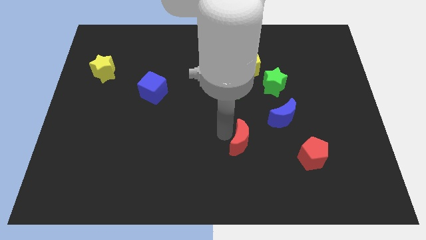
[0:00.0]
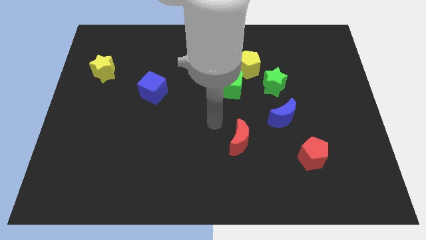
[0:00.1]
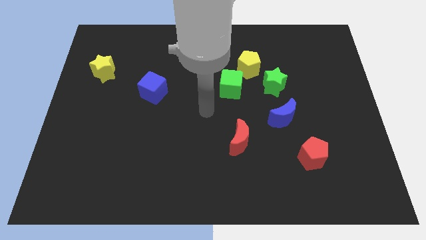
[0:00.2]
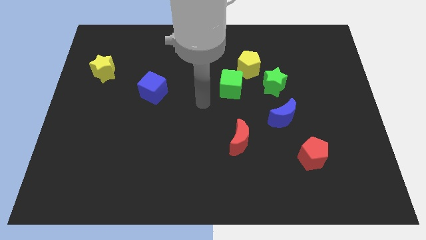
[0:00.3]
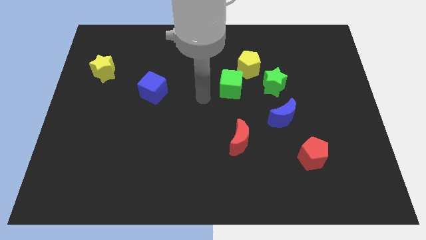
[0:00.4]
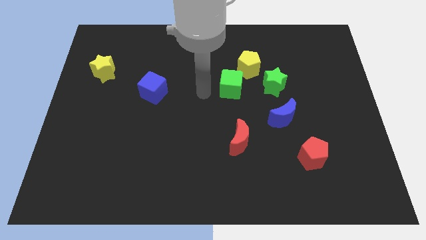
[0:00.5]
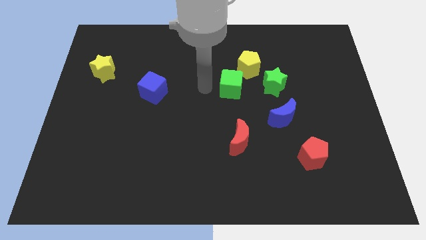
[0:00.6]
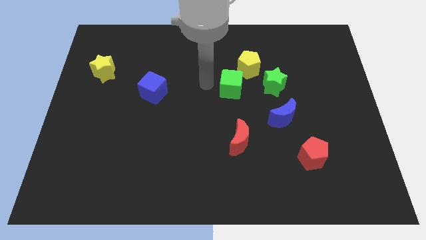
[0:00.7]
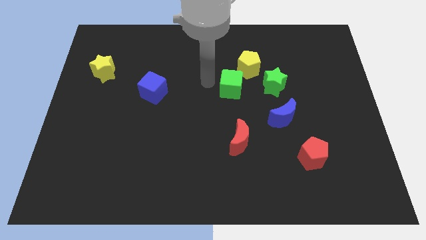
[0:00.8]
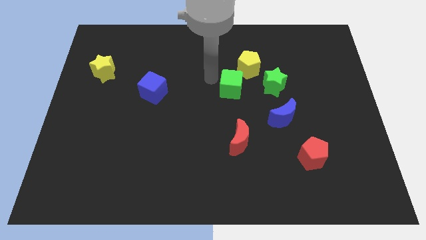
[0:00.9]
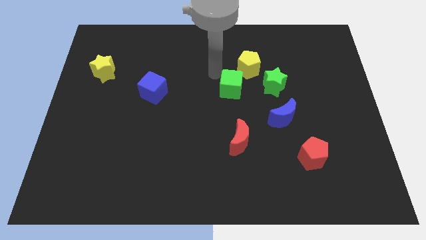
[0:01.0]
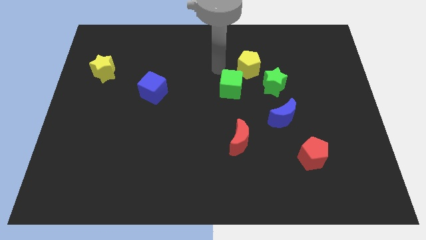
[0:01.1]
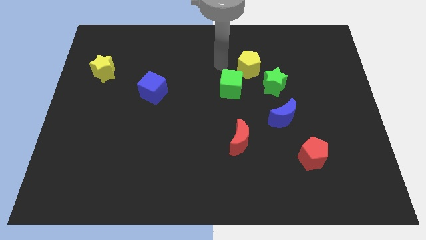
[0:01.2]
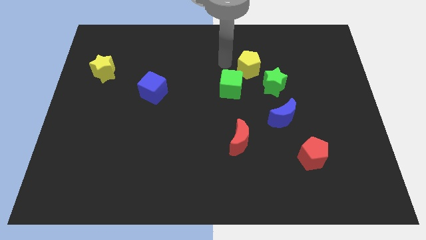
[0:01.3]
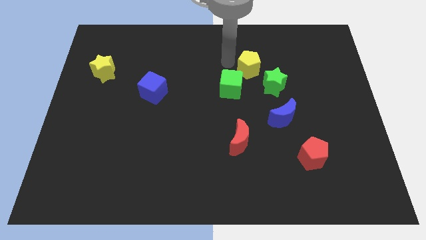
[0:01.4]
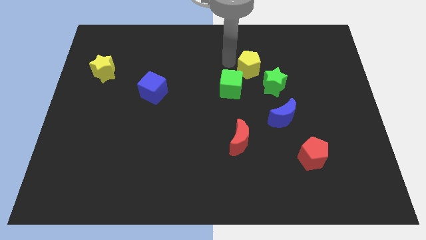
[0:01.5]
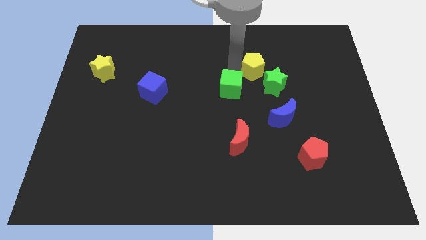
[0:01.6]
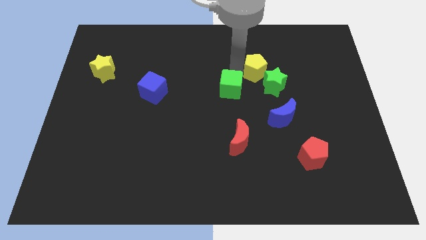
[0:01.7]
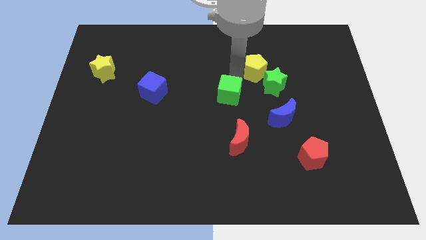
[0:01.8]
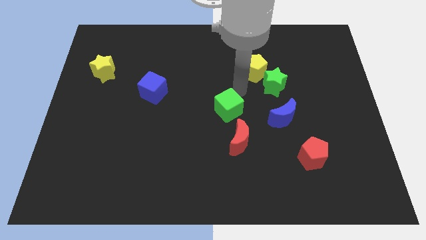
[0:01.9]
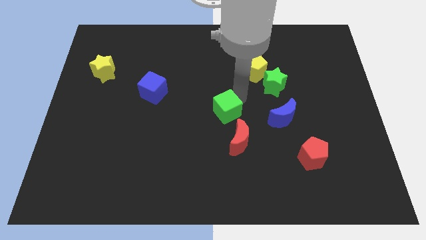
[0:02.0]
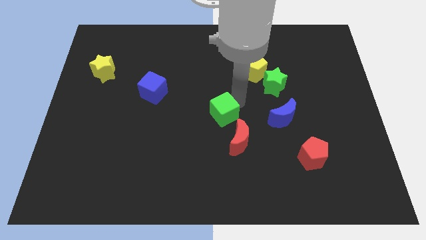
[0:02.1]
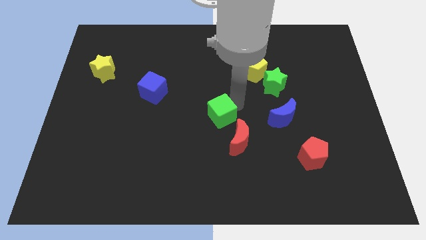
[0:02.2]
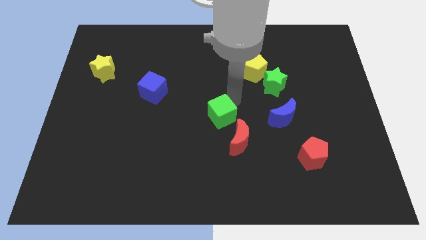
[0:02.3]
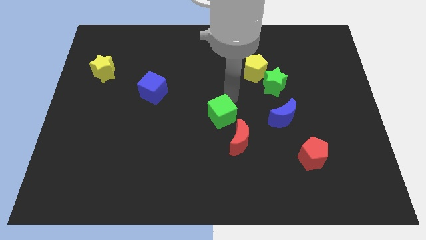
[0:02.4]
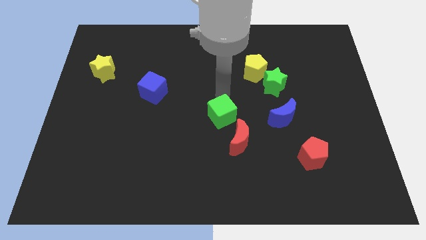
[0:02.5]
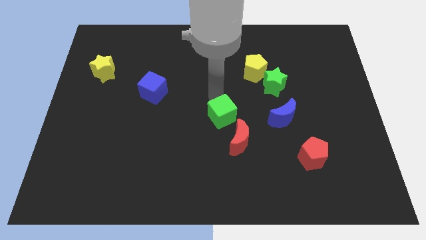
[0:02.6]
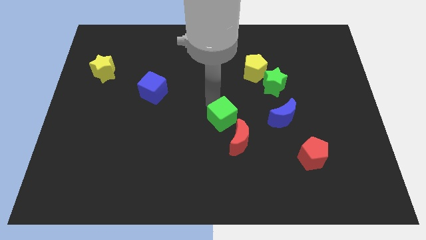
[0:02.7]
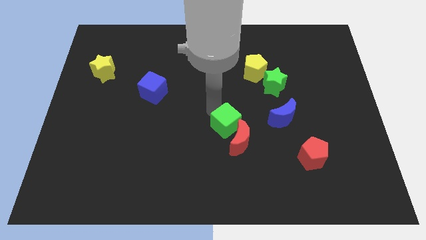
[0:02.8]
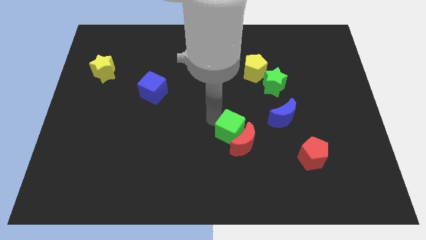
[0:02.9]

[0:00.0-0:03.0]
make the green cube touch the red crescent

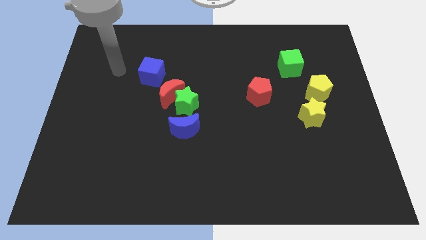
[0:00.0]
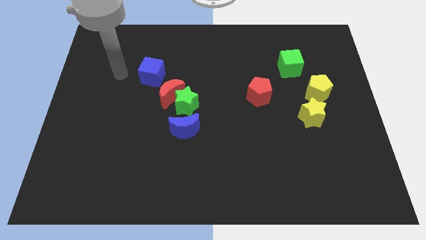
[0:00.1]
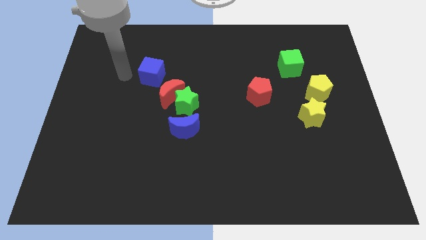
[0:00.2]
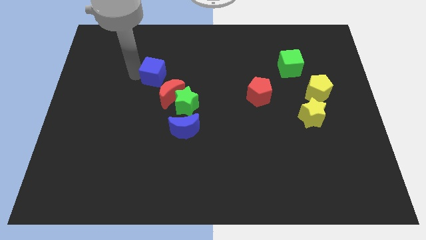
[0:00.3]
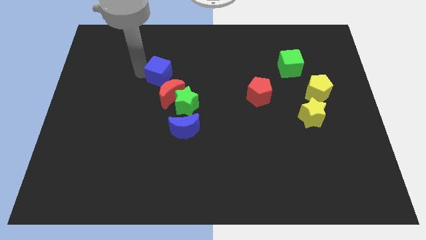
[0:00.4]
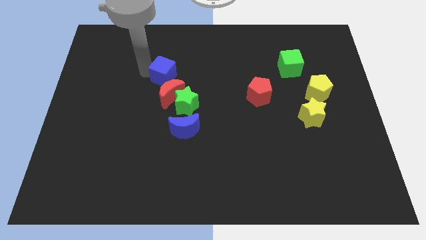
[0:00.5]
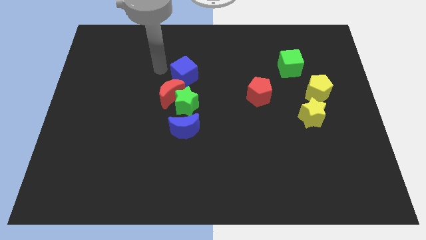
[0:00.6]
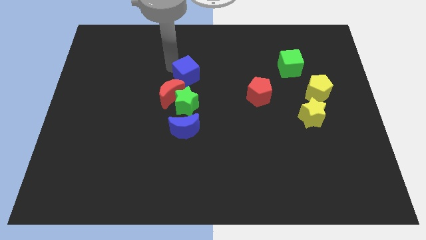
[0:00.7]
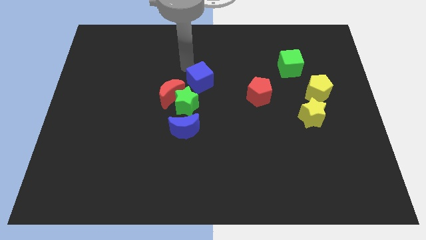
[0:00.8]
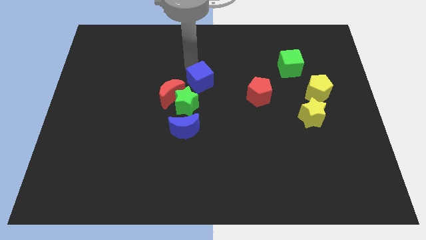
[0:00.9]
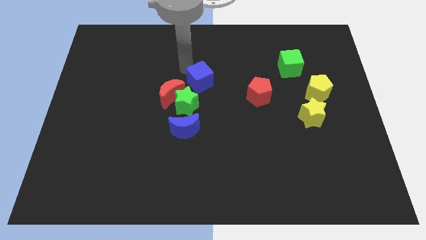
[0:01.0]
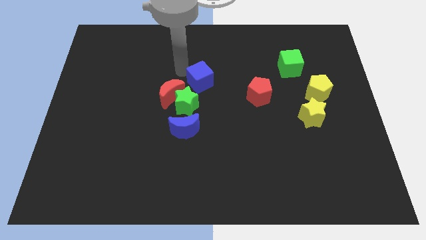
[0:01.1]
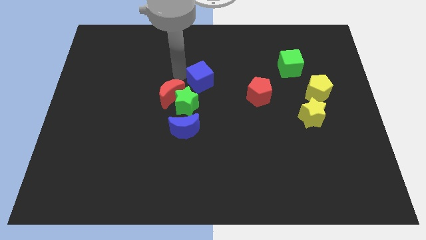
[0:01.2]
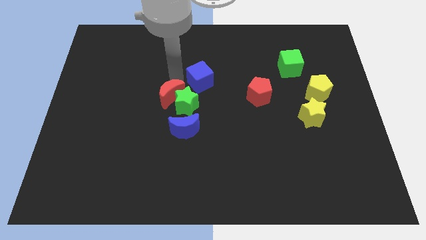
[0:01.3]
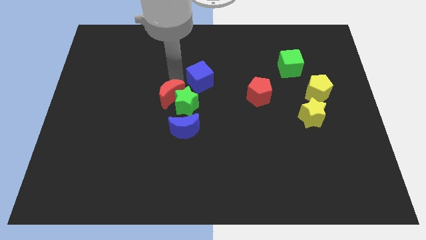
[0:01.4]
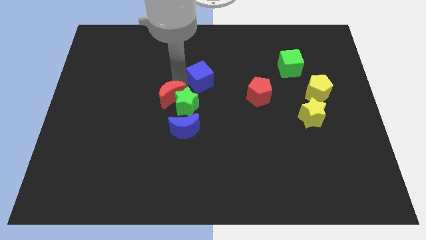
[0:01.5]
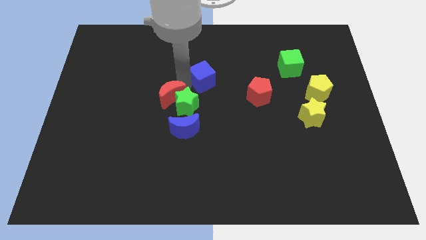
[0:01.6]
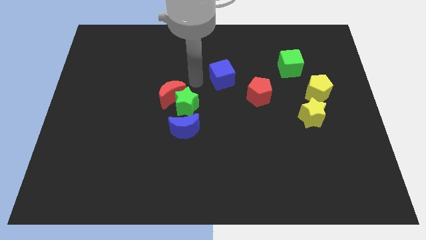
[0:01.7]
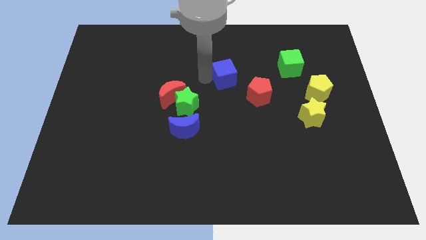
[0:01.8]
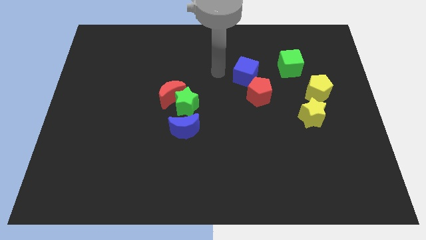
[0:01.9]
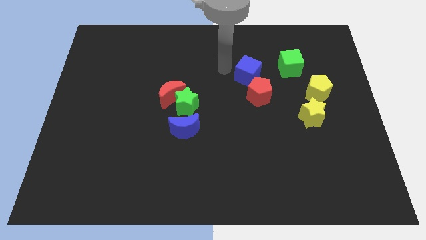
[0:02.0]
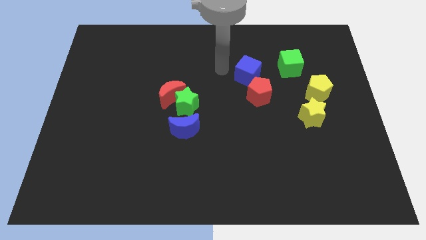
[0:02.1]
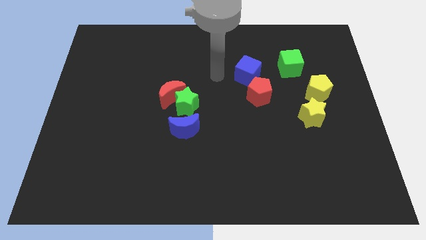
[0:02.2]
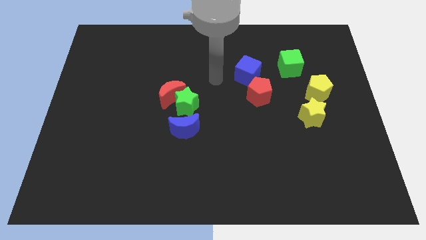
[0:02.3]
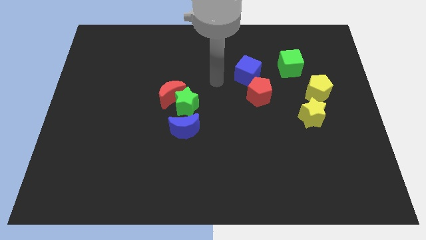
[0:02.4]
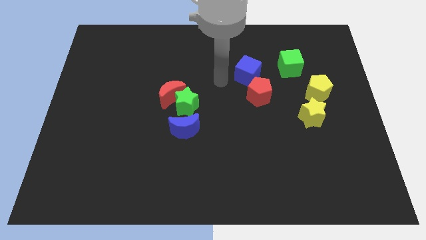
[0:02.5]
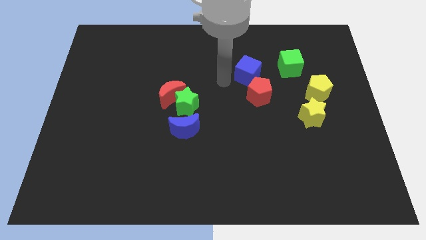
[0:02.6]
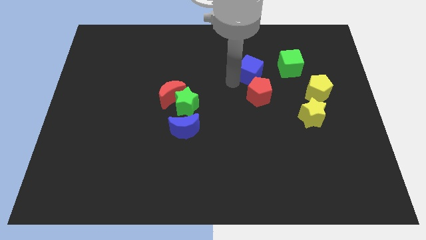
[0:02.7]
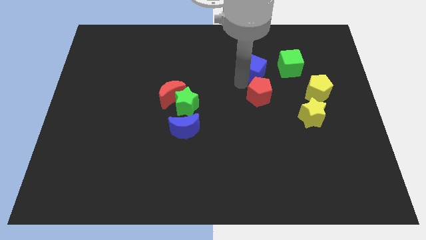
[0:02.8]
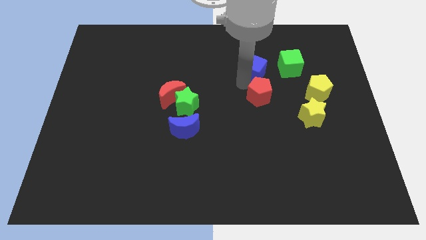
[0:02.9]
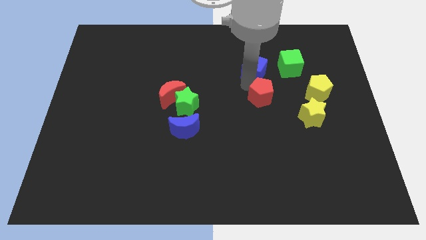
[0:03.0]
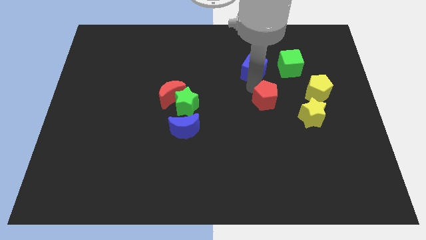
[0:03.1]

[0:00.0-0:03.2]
point your arm between blue cube and red pentagon

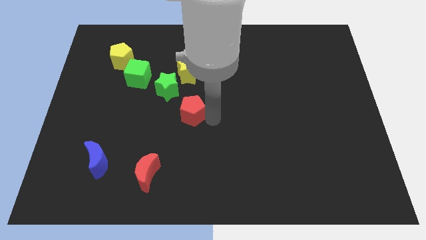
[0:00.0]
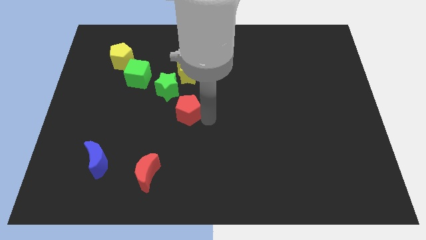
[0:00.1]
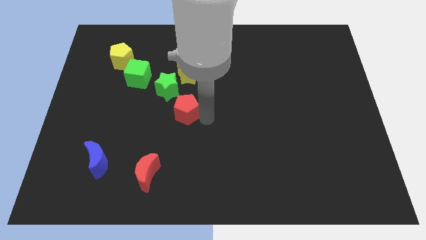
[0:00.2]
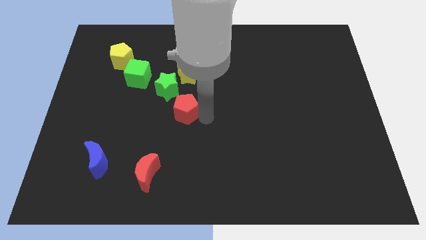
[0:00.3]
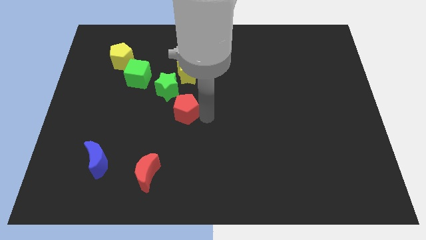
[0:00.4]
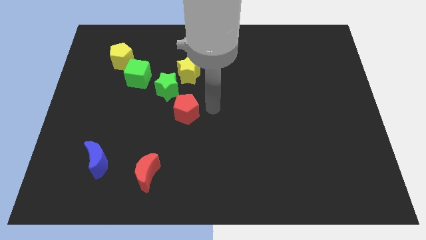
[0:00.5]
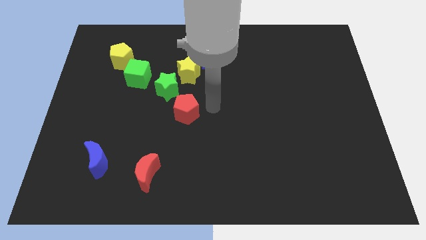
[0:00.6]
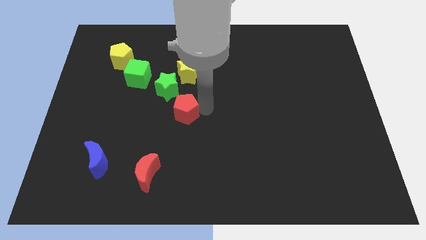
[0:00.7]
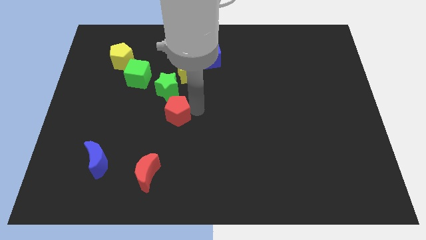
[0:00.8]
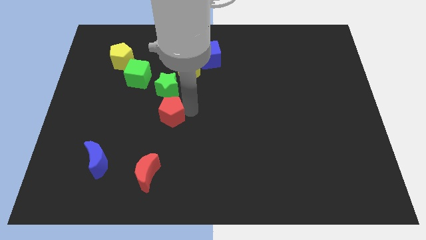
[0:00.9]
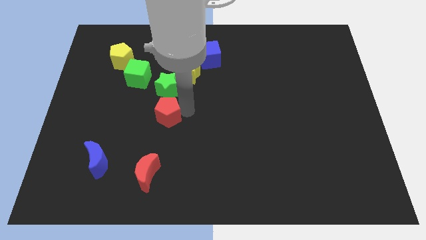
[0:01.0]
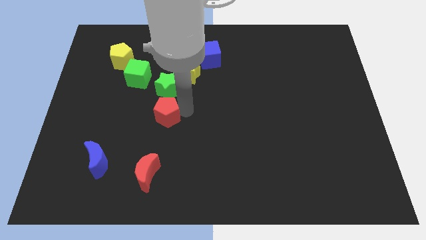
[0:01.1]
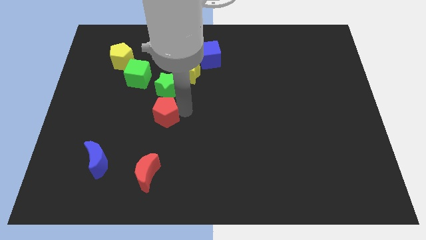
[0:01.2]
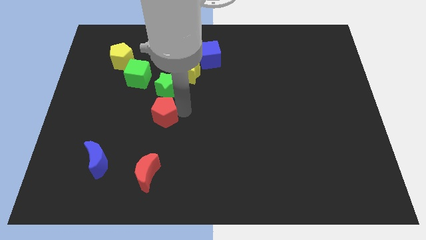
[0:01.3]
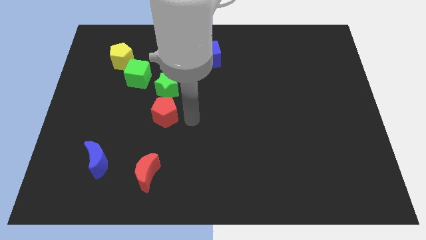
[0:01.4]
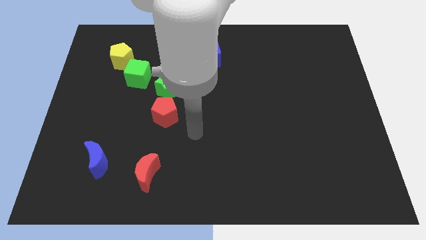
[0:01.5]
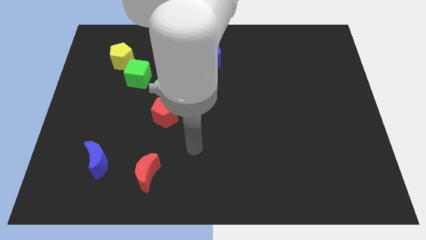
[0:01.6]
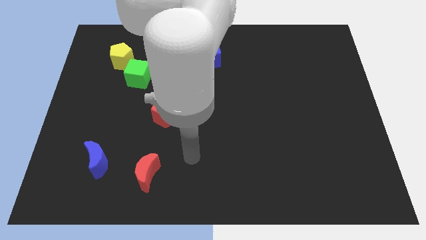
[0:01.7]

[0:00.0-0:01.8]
place the red pentagon below the green star

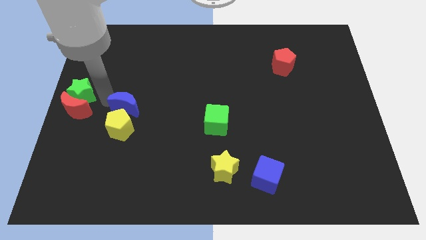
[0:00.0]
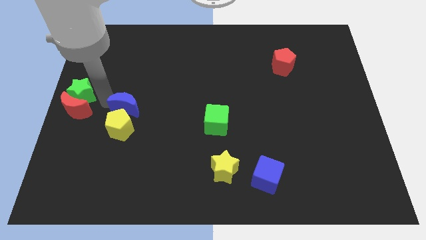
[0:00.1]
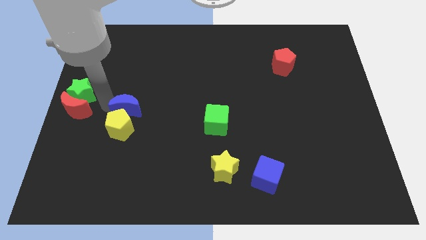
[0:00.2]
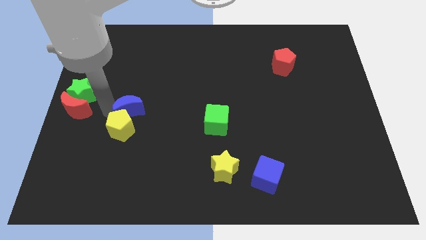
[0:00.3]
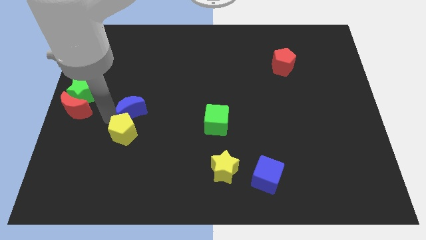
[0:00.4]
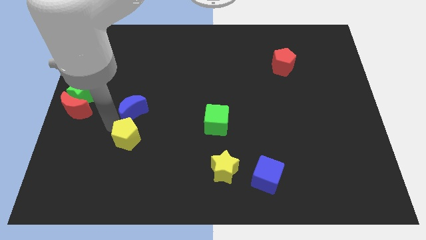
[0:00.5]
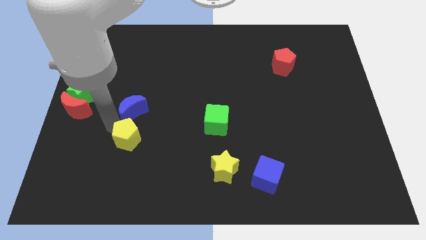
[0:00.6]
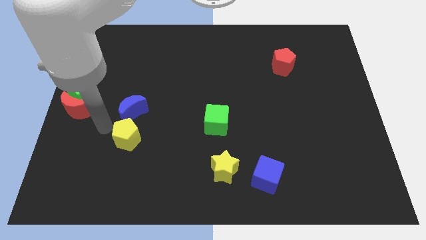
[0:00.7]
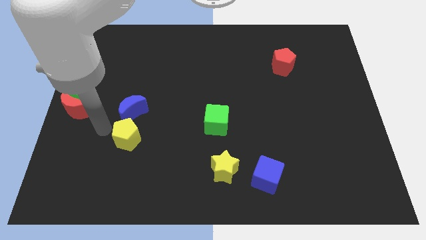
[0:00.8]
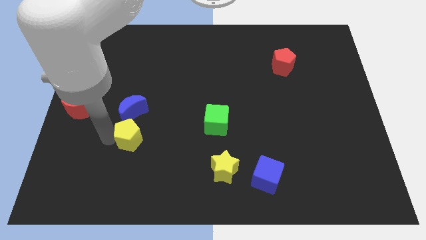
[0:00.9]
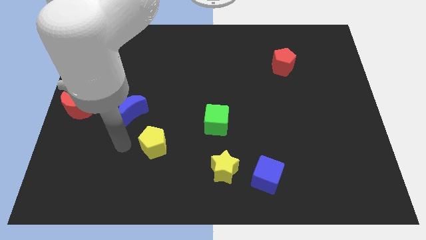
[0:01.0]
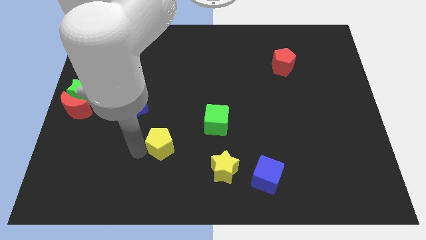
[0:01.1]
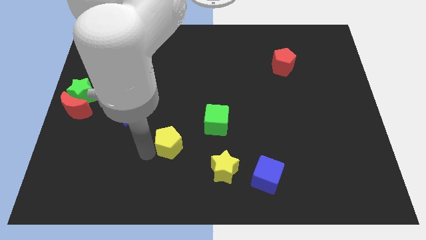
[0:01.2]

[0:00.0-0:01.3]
push the blue moon into the yellow pentagon

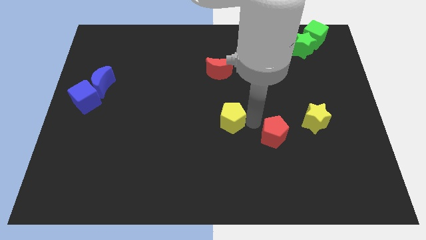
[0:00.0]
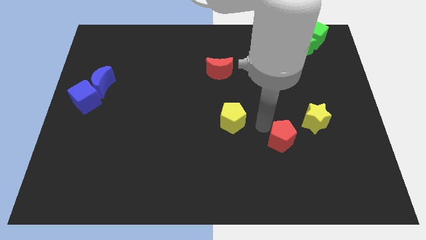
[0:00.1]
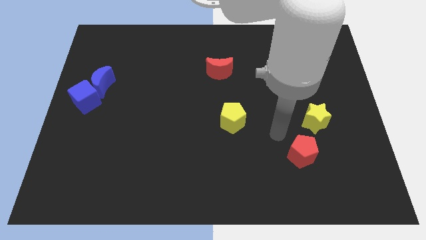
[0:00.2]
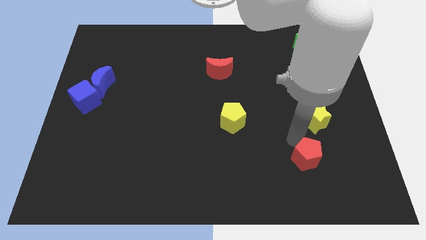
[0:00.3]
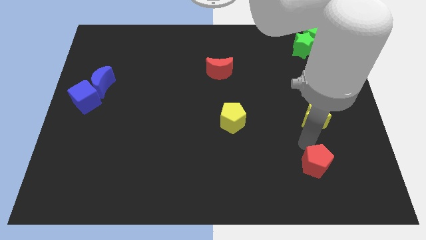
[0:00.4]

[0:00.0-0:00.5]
push the red pentagon below the yellow star
